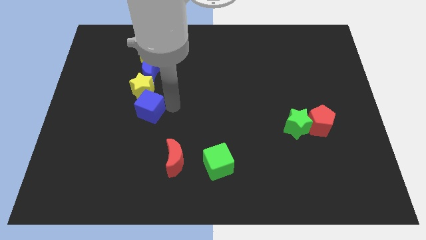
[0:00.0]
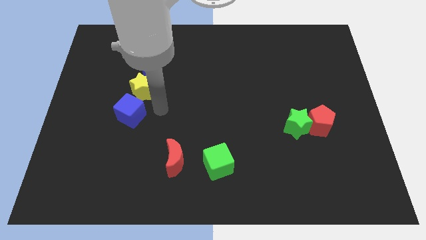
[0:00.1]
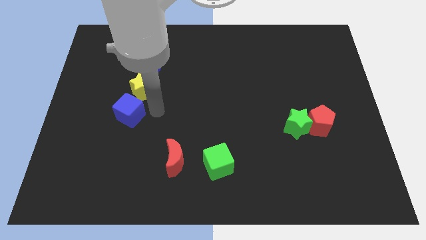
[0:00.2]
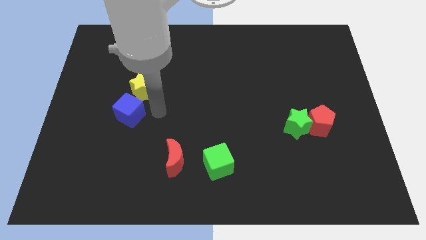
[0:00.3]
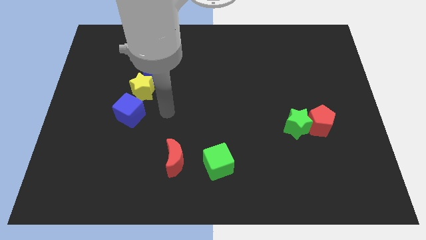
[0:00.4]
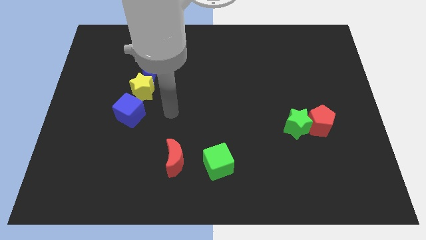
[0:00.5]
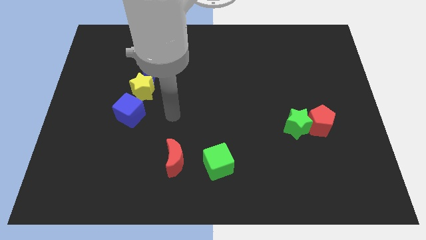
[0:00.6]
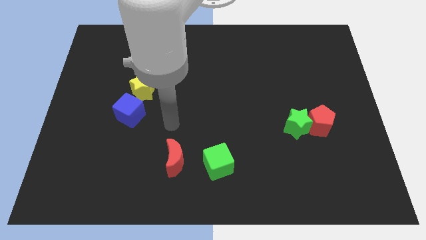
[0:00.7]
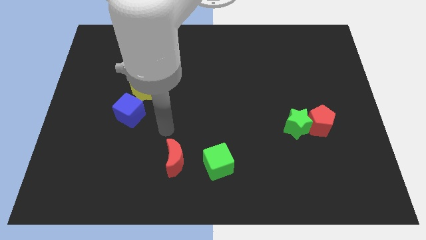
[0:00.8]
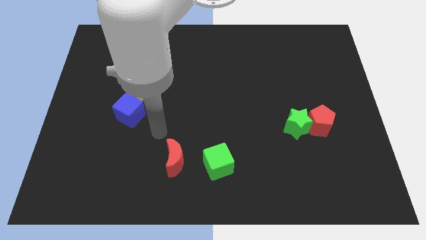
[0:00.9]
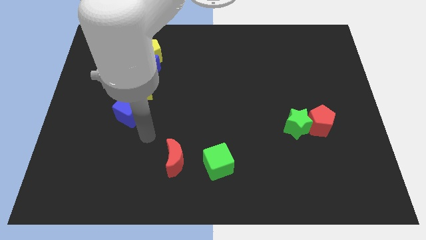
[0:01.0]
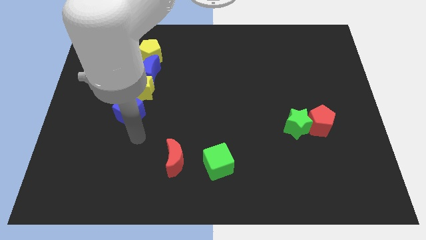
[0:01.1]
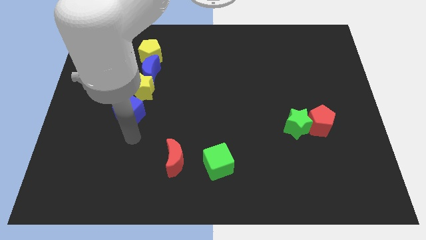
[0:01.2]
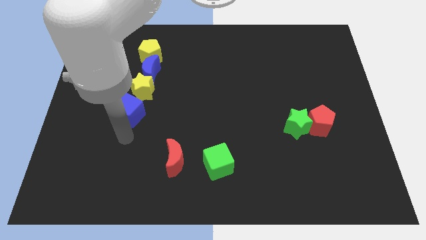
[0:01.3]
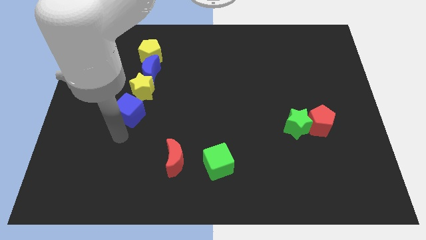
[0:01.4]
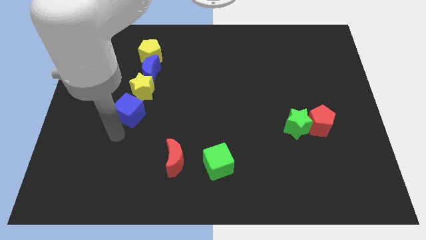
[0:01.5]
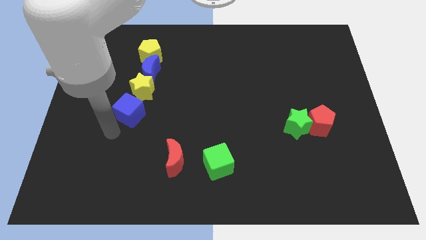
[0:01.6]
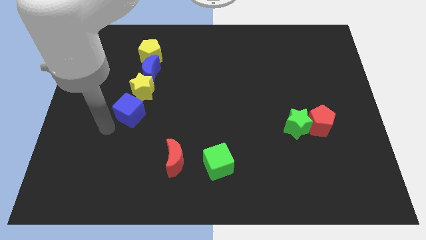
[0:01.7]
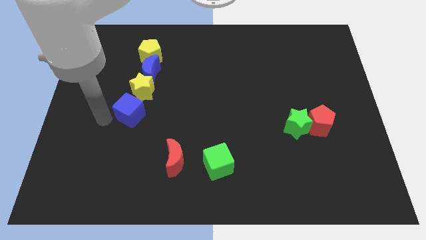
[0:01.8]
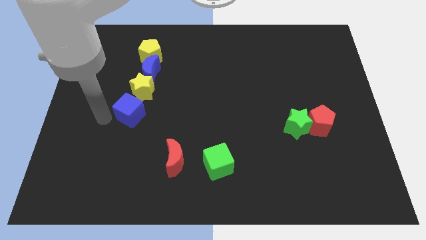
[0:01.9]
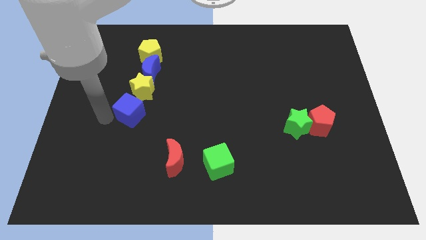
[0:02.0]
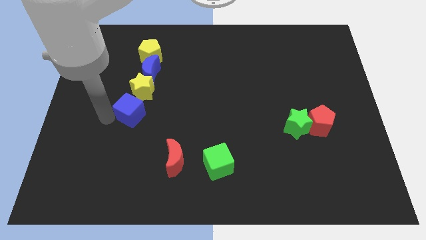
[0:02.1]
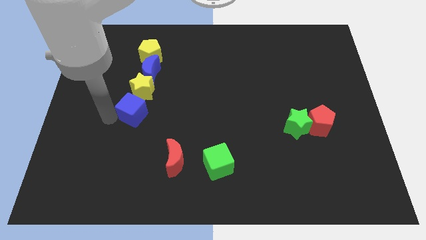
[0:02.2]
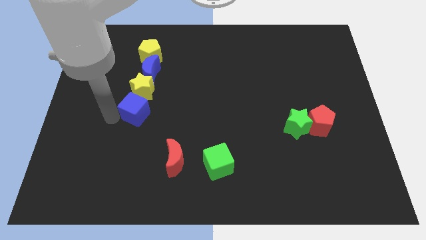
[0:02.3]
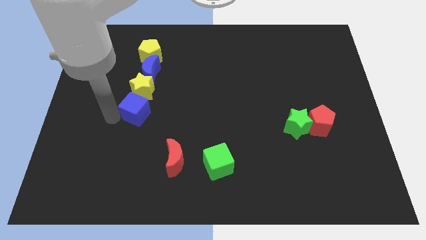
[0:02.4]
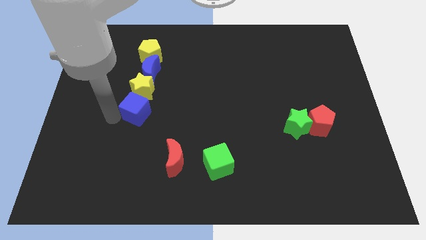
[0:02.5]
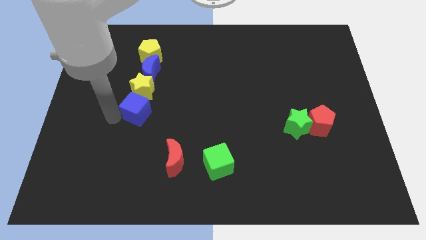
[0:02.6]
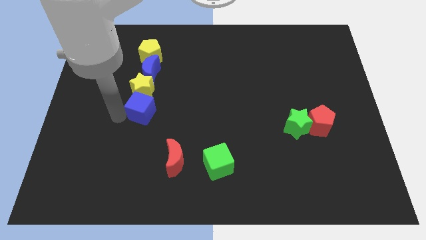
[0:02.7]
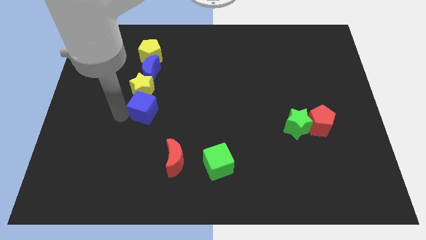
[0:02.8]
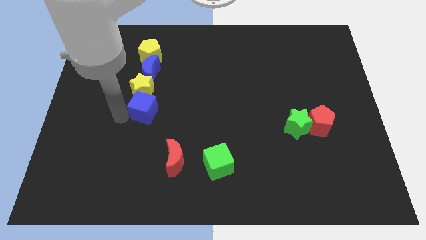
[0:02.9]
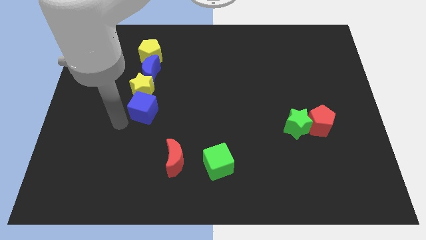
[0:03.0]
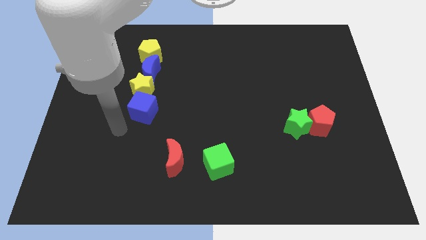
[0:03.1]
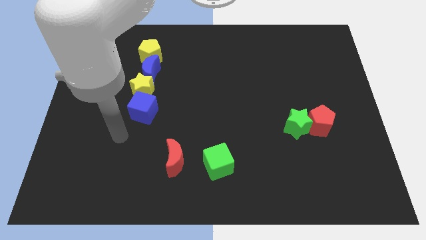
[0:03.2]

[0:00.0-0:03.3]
adjust the blue cube to form a line

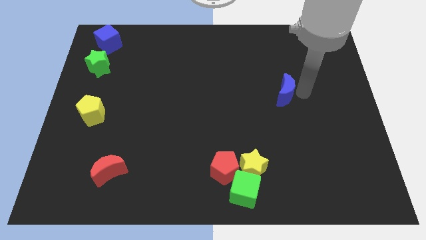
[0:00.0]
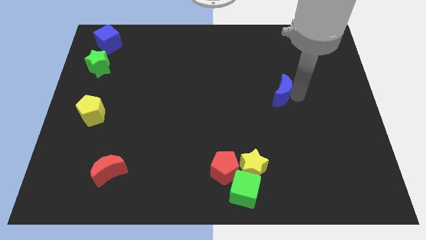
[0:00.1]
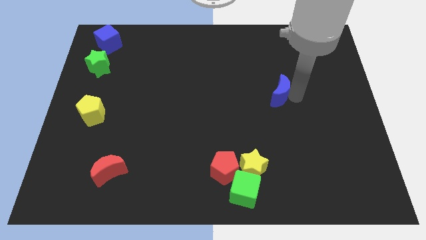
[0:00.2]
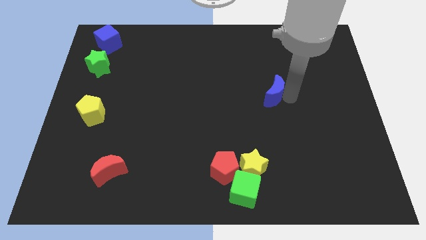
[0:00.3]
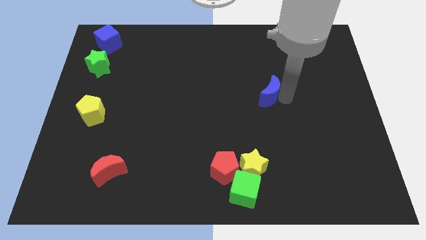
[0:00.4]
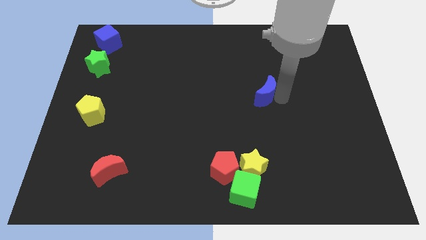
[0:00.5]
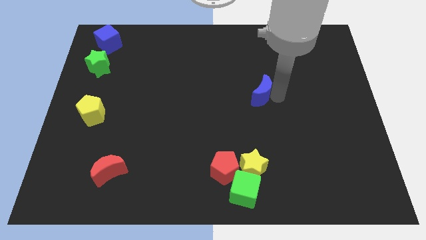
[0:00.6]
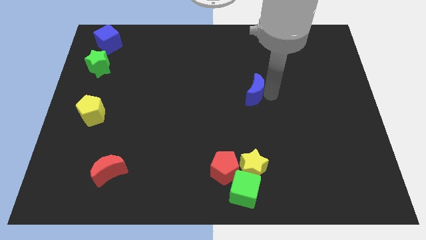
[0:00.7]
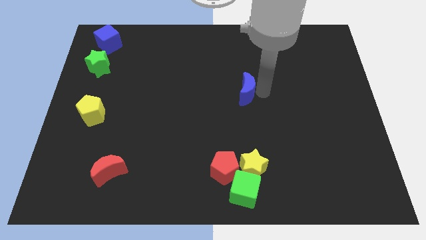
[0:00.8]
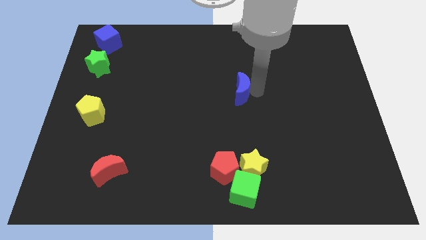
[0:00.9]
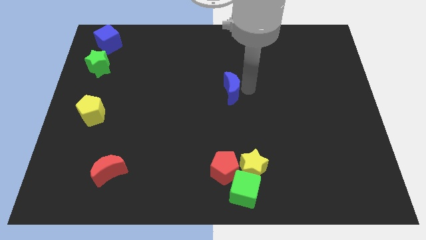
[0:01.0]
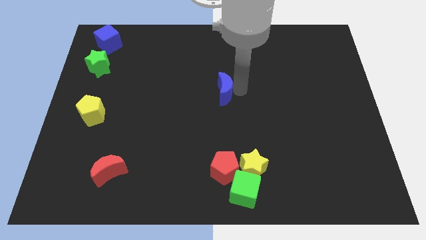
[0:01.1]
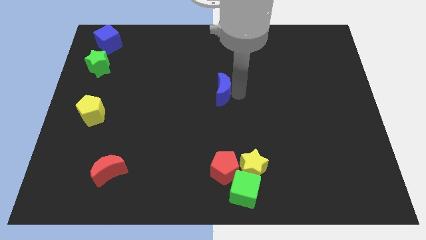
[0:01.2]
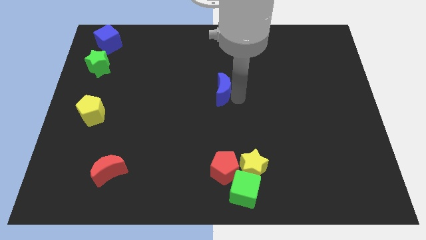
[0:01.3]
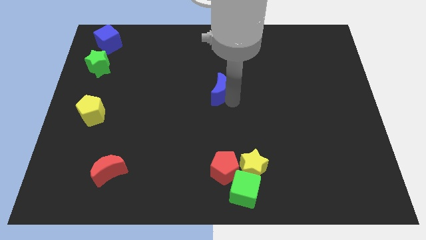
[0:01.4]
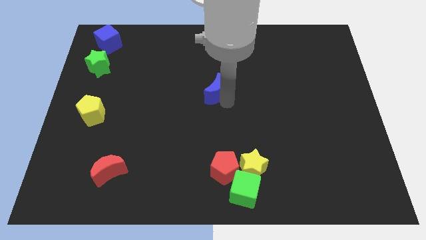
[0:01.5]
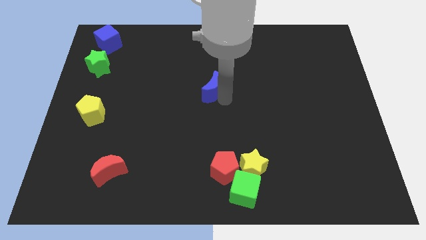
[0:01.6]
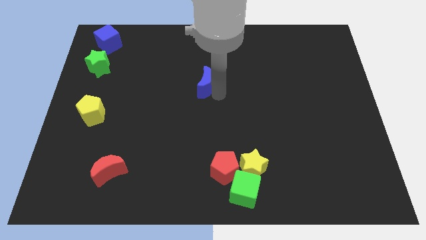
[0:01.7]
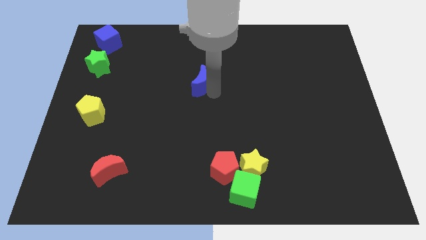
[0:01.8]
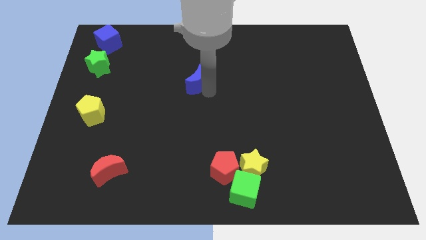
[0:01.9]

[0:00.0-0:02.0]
place the blue moon at the center of the board

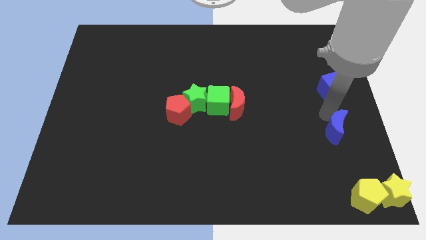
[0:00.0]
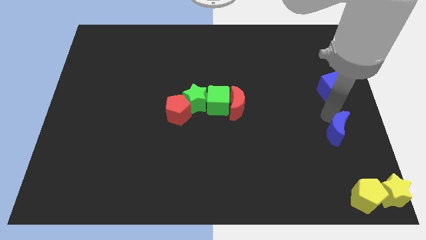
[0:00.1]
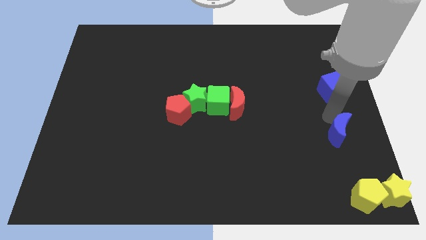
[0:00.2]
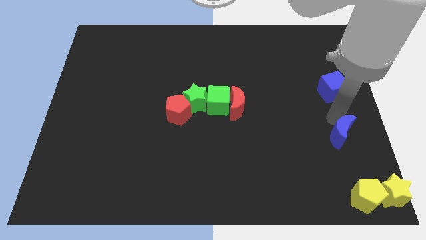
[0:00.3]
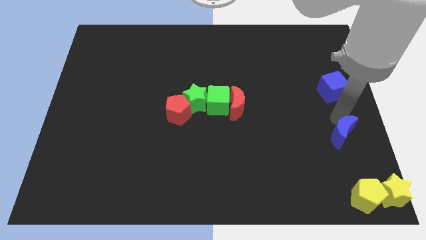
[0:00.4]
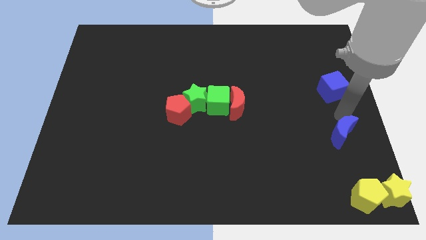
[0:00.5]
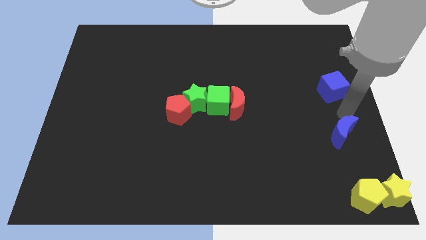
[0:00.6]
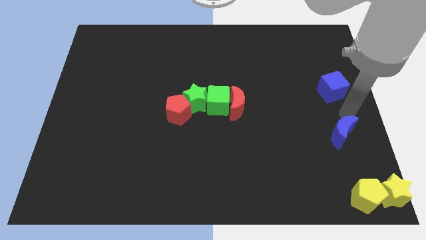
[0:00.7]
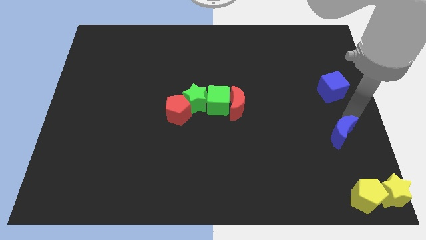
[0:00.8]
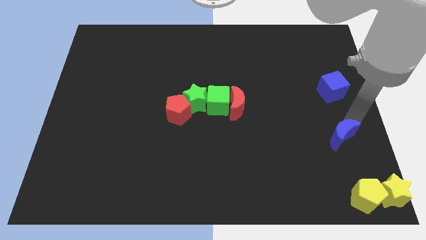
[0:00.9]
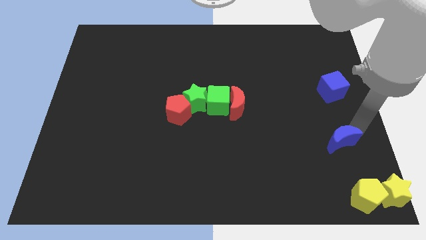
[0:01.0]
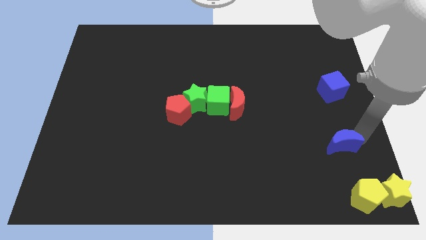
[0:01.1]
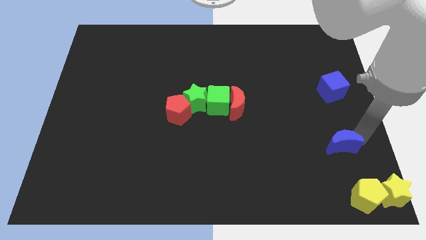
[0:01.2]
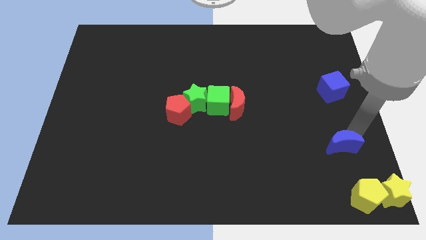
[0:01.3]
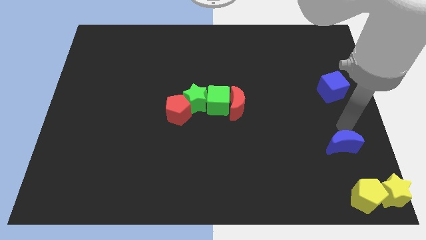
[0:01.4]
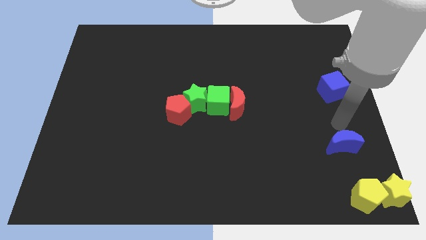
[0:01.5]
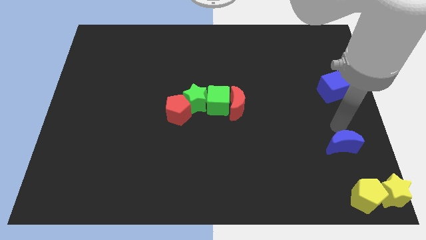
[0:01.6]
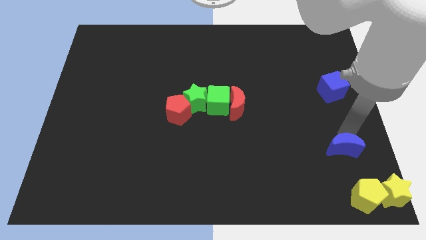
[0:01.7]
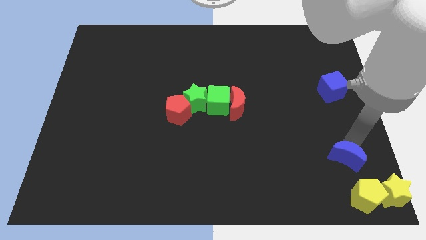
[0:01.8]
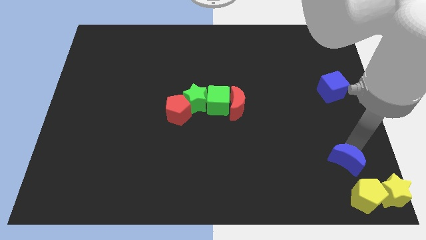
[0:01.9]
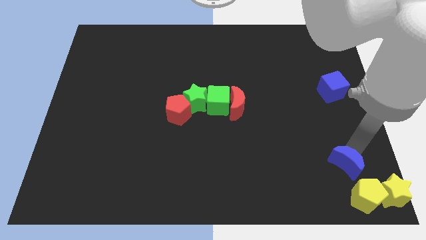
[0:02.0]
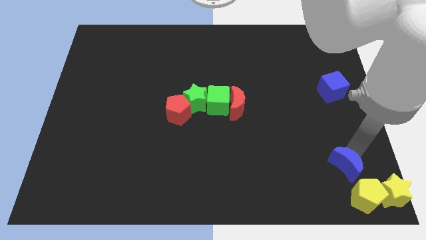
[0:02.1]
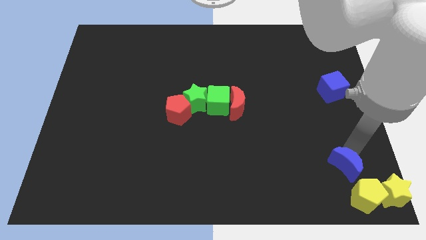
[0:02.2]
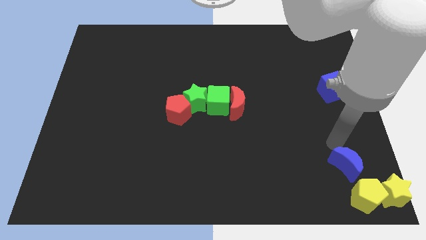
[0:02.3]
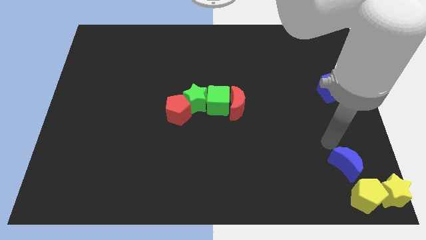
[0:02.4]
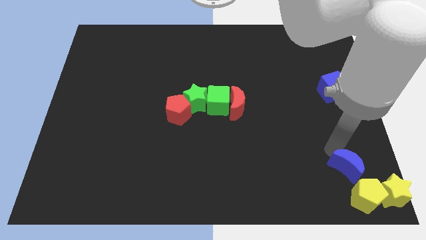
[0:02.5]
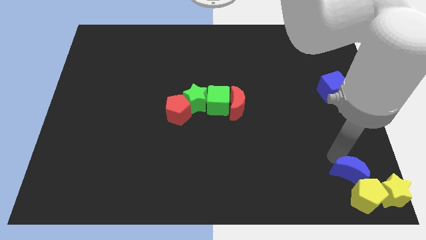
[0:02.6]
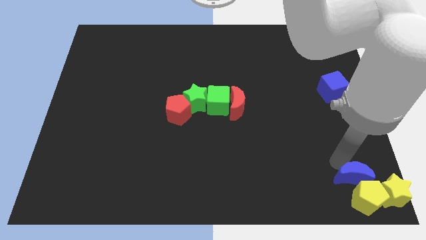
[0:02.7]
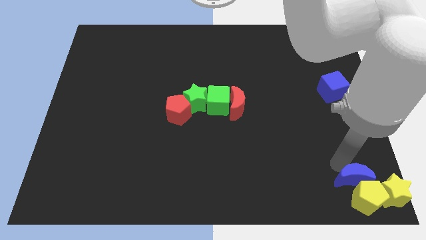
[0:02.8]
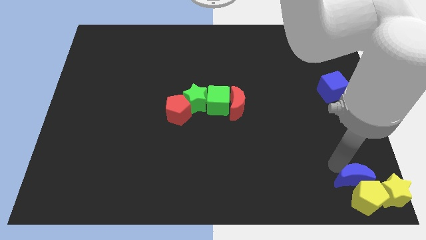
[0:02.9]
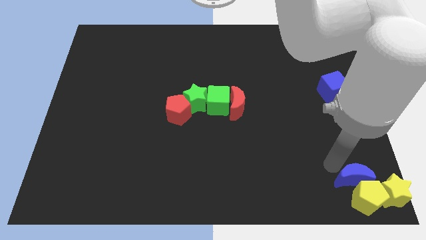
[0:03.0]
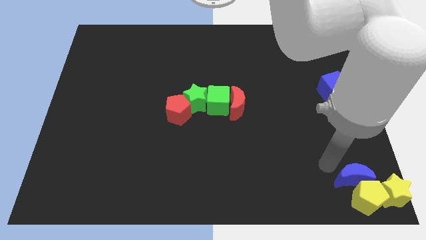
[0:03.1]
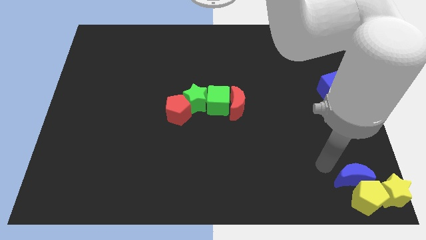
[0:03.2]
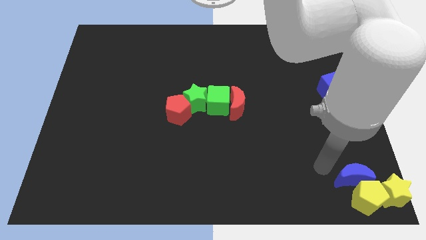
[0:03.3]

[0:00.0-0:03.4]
place the blue moon close to the yellow block

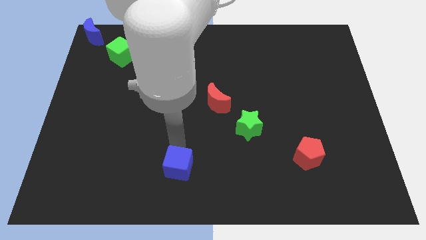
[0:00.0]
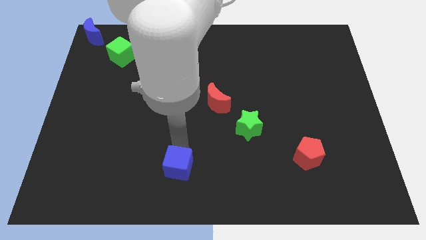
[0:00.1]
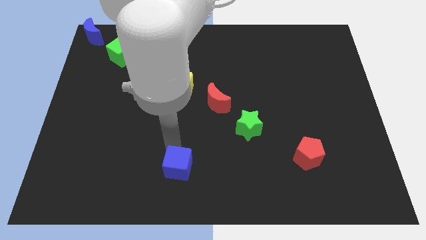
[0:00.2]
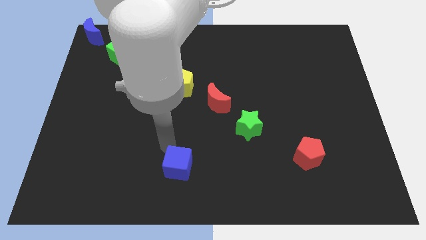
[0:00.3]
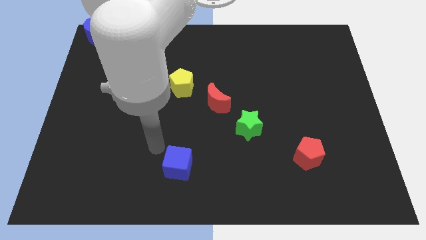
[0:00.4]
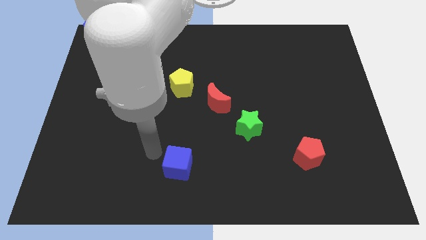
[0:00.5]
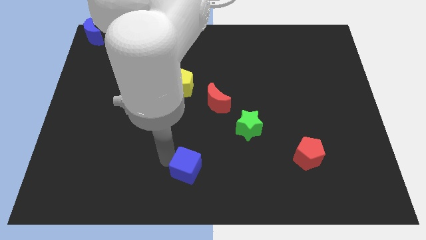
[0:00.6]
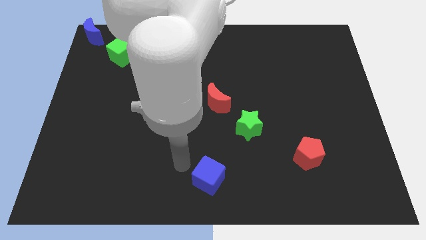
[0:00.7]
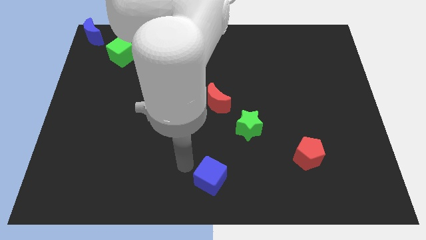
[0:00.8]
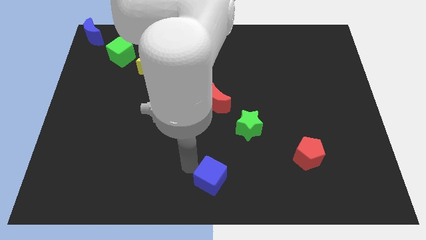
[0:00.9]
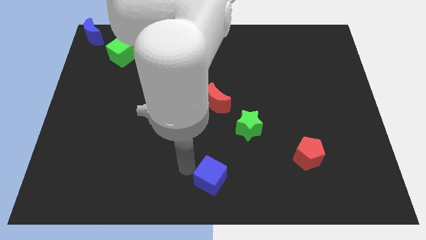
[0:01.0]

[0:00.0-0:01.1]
push the blue cube to the bottom center of the board
